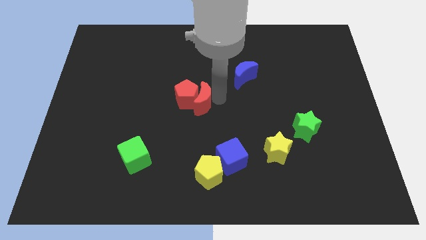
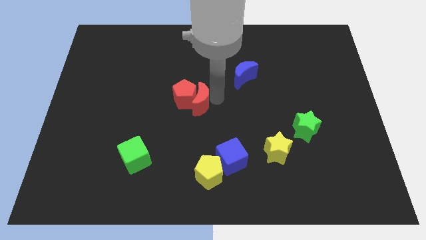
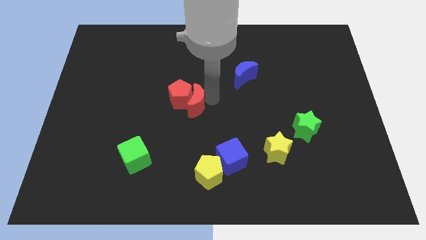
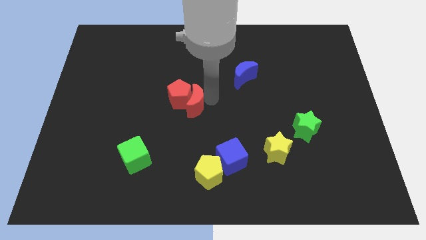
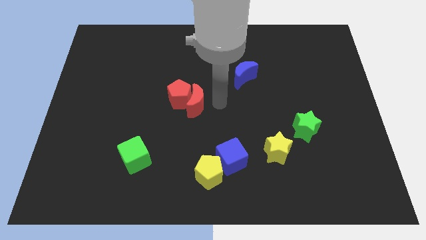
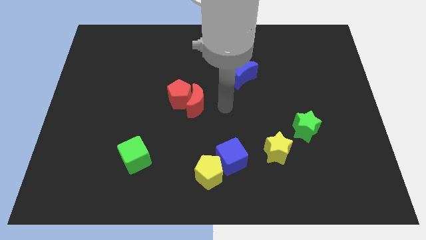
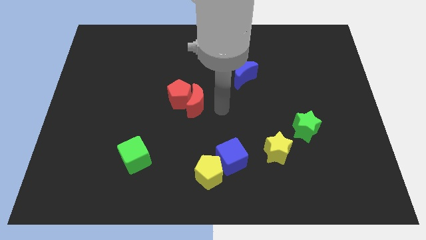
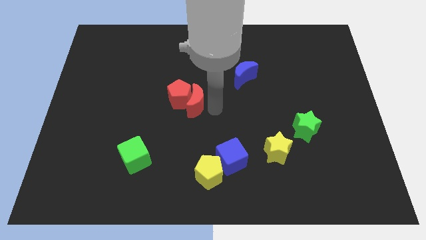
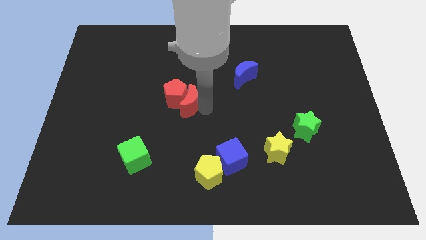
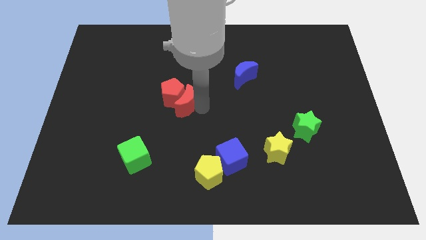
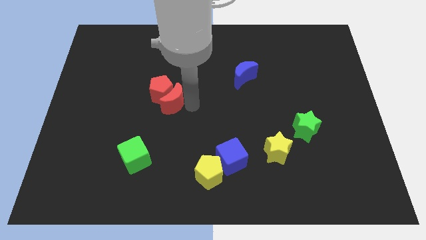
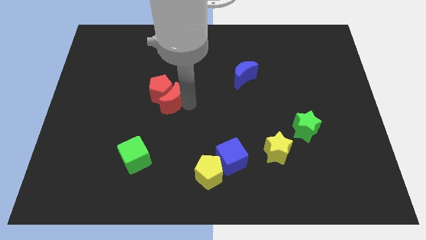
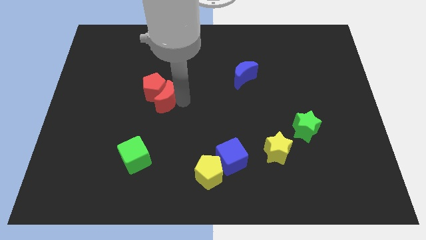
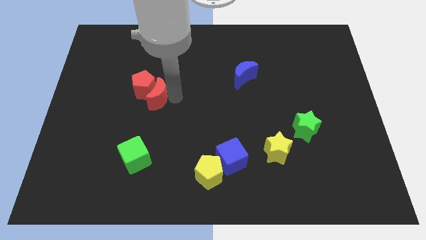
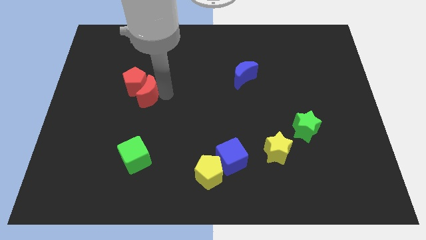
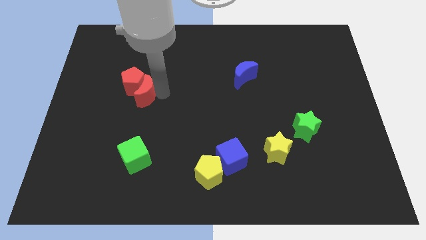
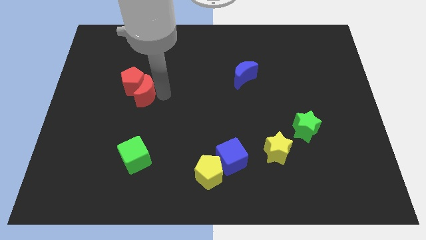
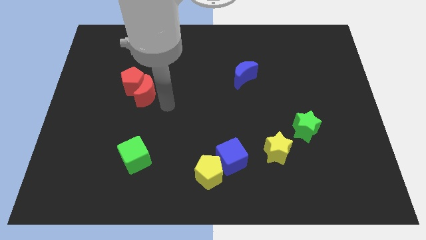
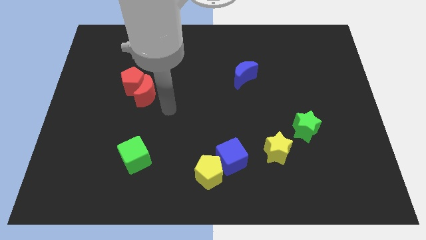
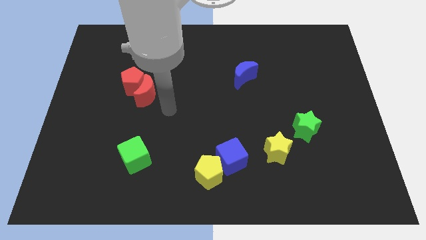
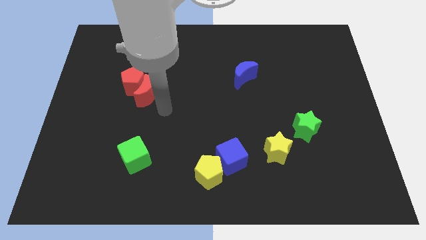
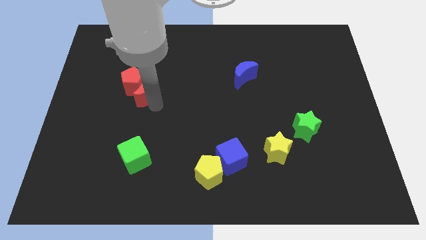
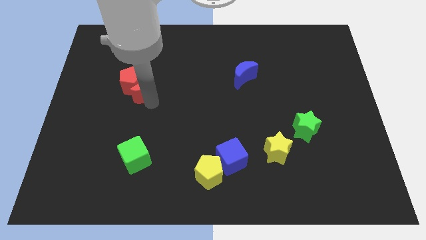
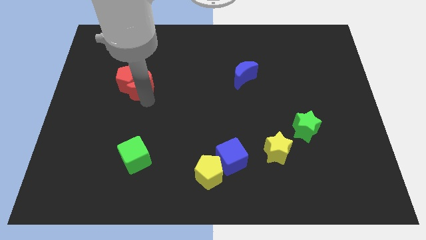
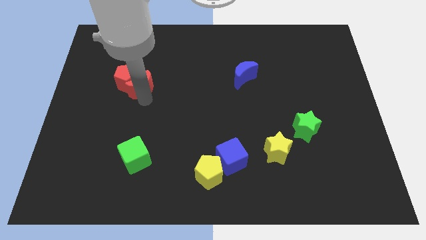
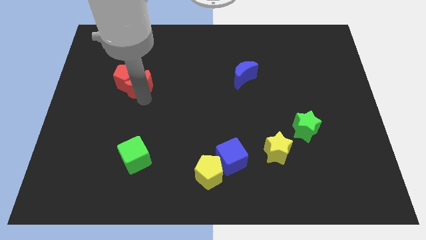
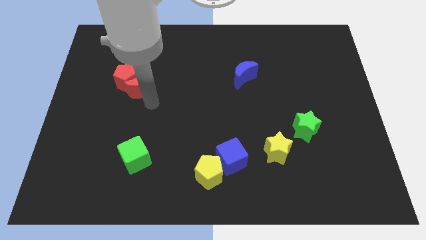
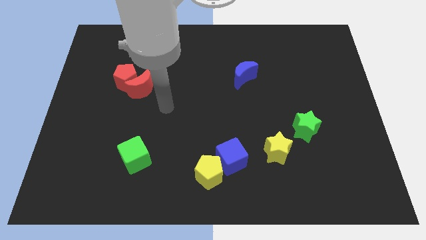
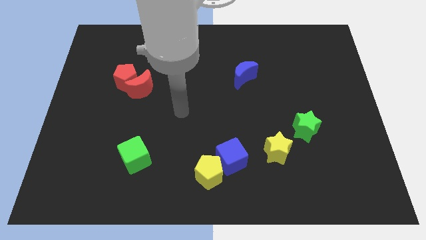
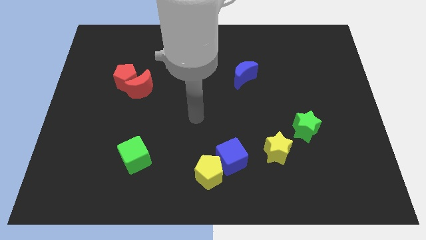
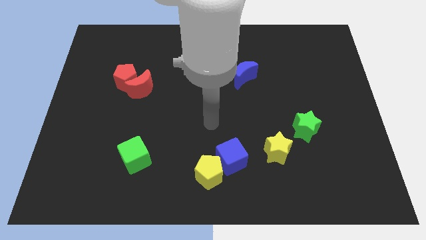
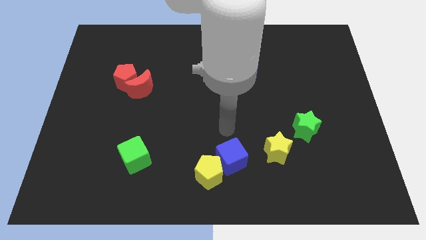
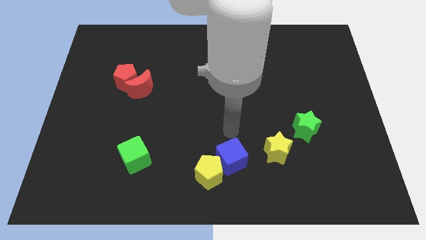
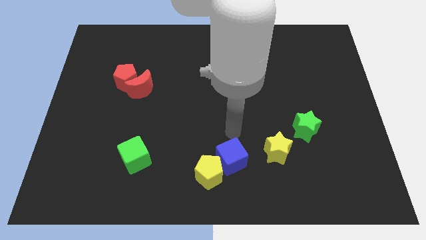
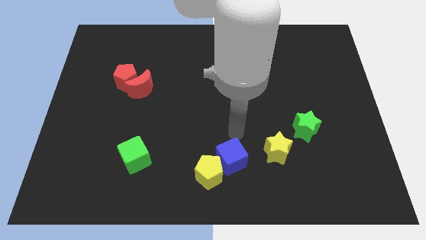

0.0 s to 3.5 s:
move the red pentagon with the red moon

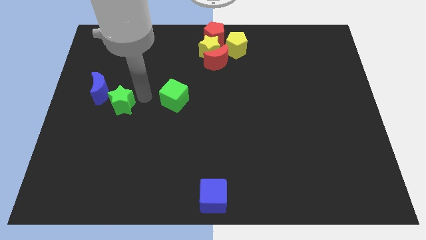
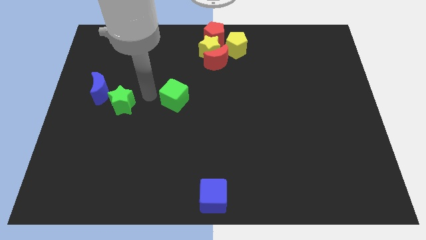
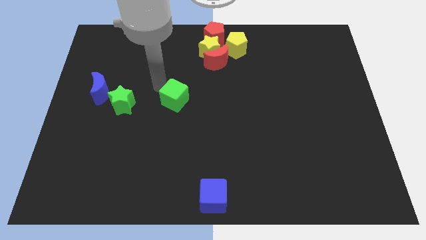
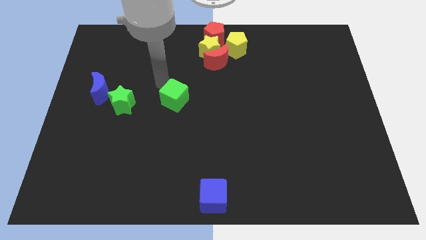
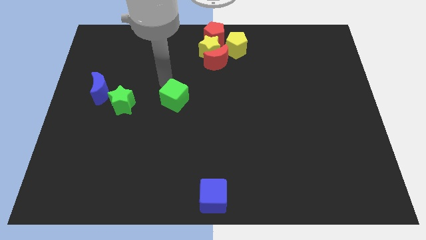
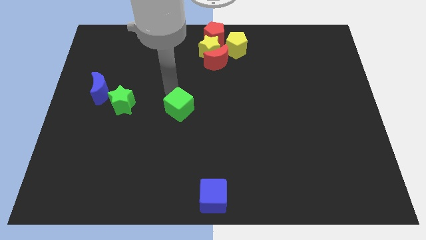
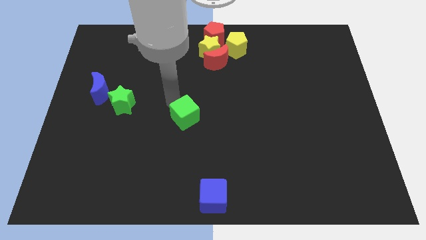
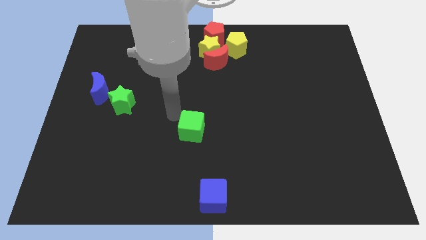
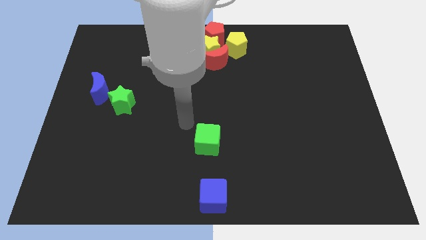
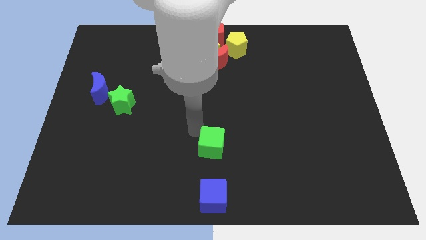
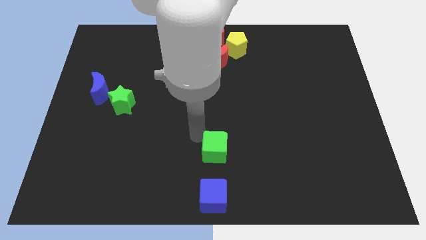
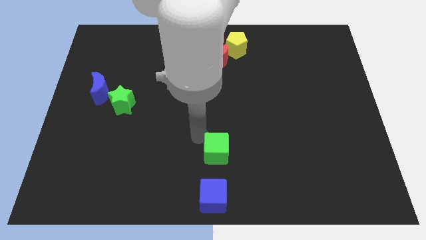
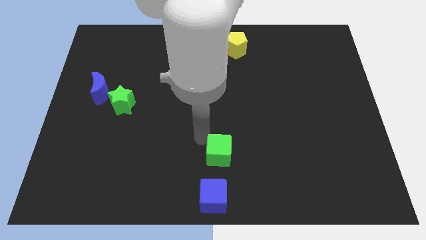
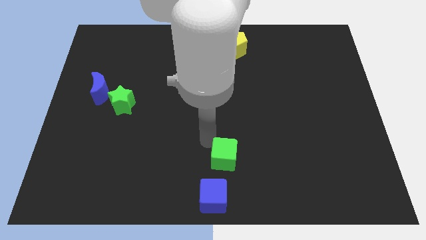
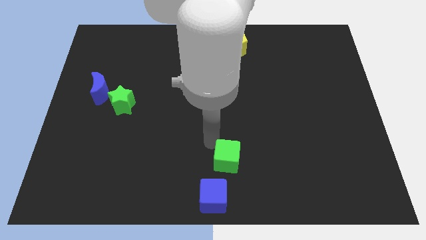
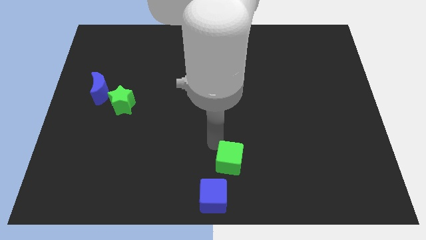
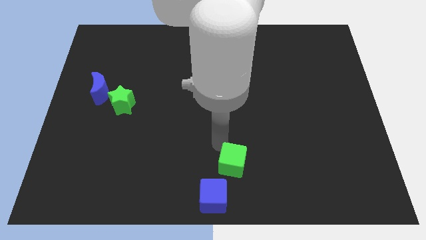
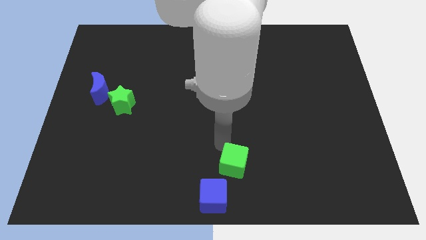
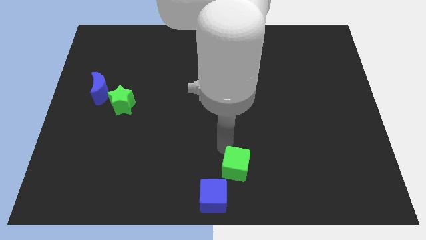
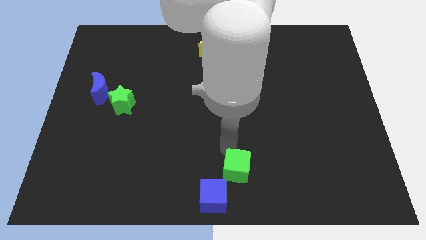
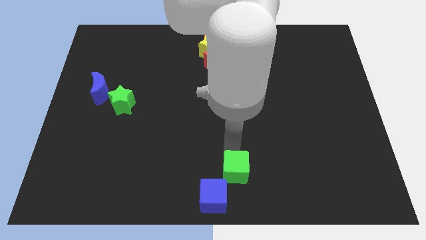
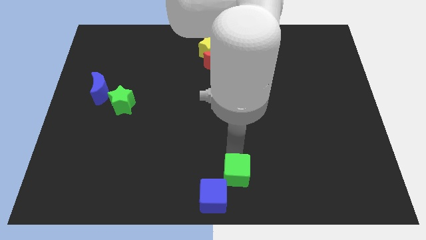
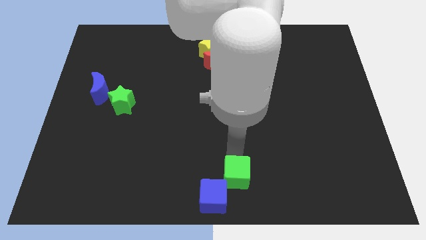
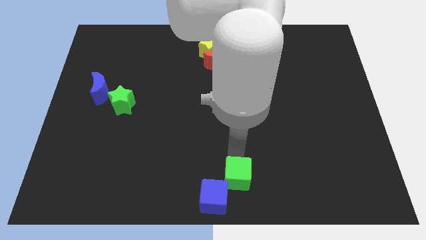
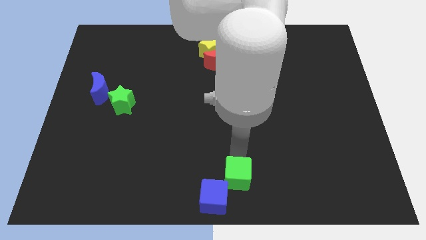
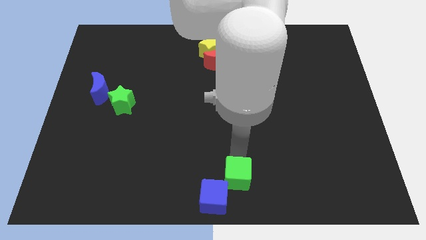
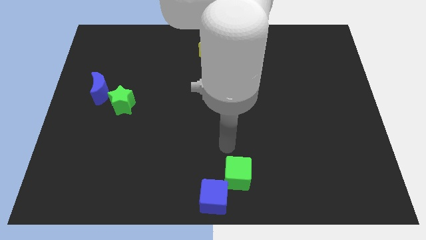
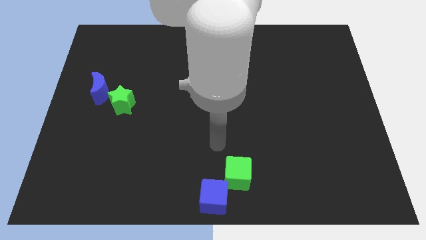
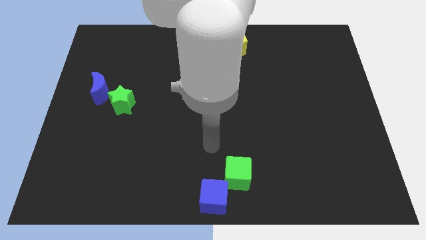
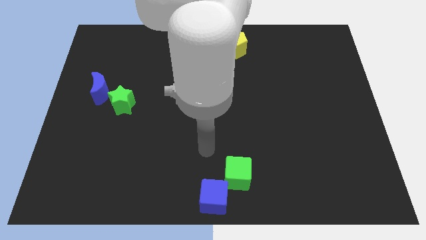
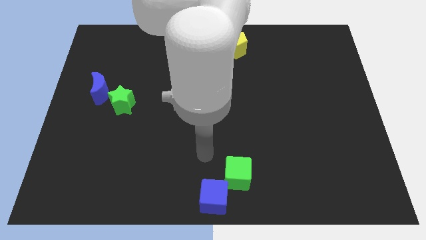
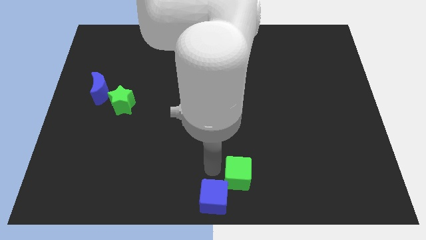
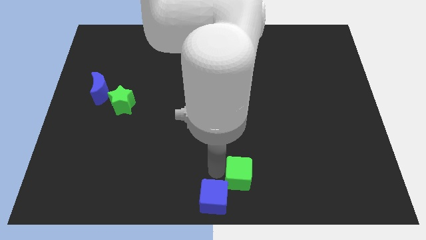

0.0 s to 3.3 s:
put the green cube diagonally top right to the blue cube

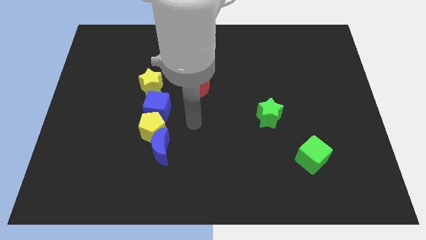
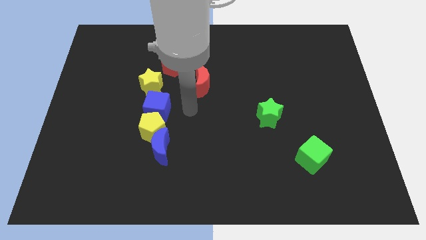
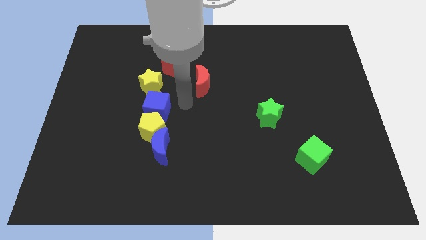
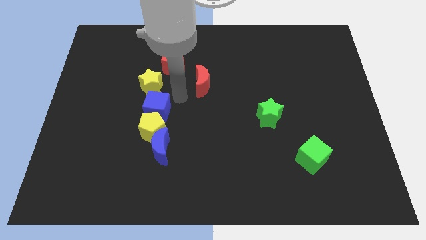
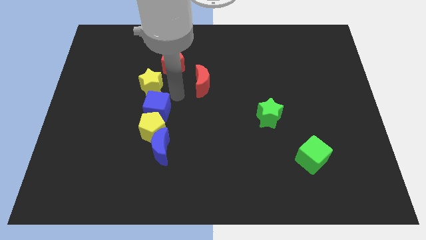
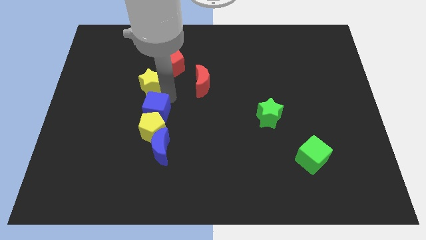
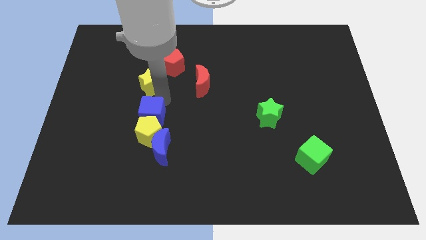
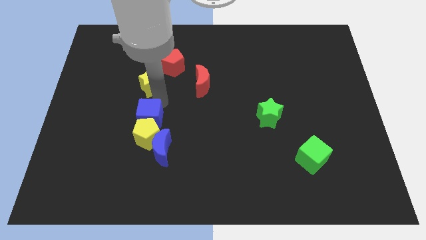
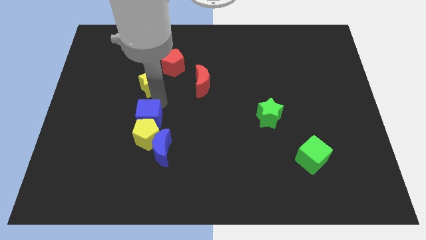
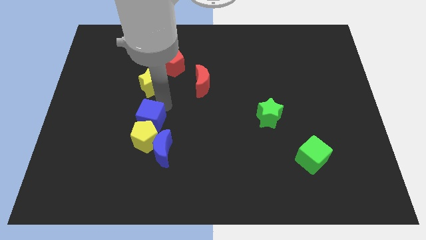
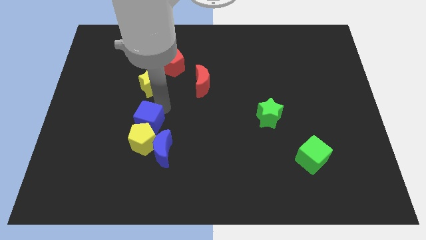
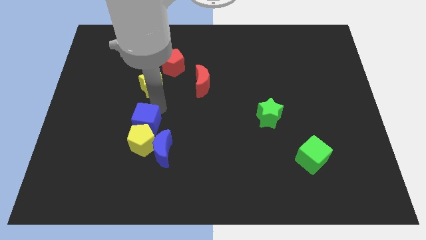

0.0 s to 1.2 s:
separate blue cube from the yellow star

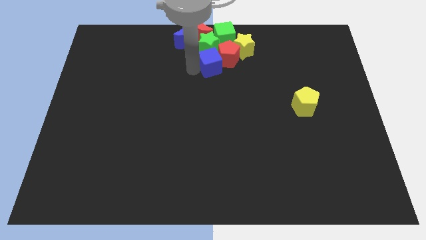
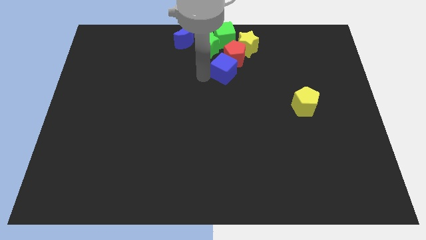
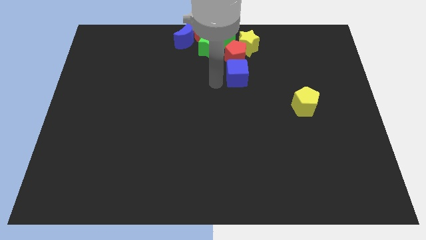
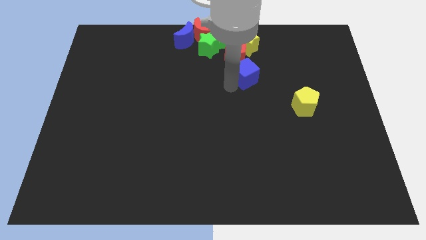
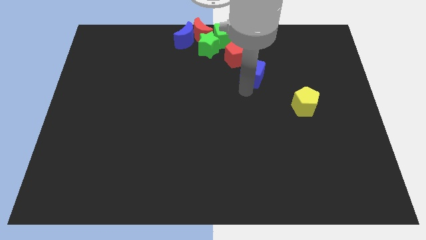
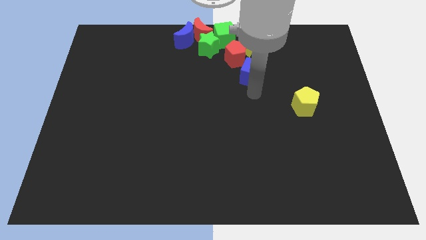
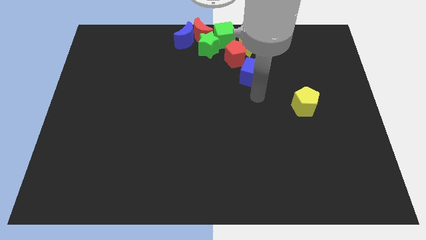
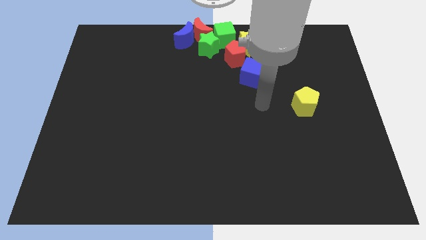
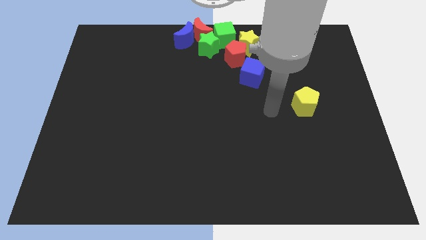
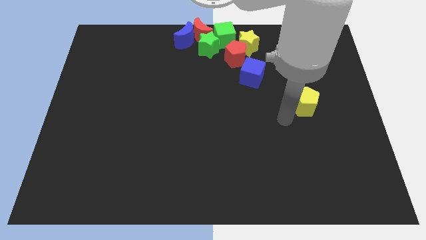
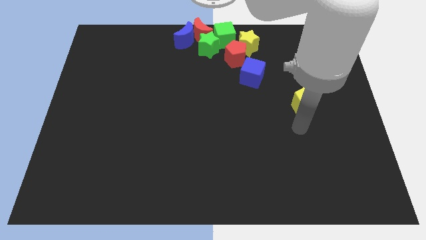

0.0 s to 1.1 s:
move your arm away from the blue cube

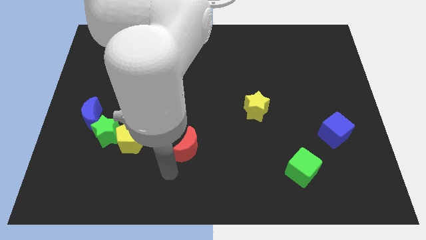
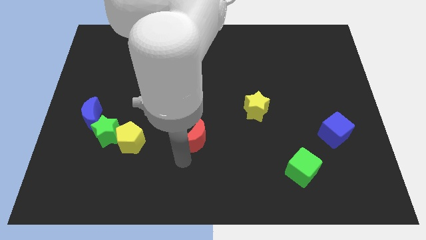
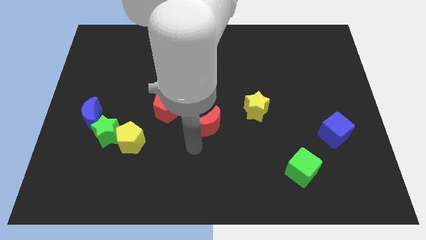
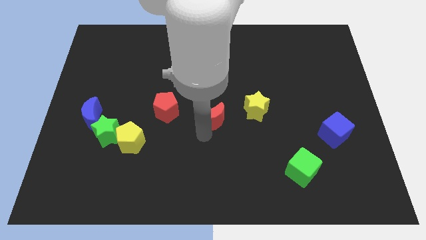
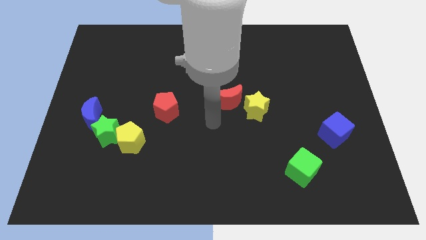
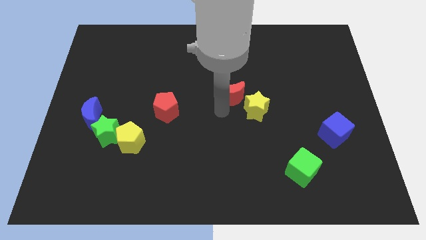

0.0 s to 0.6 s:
move the red crescent to the left of the yellow star
